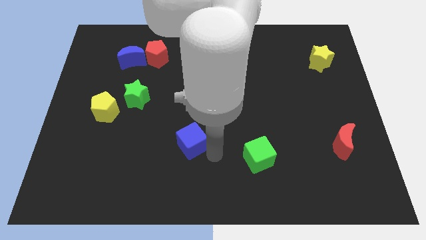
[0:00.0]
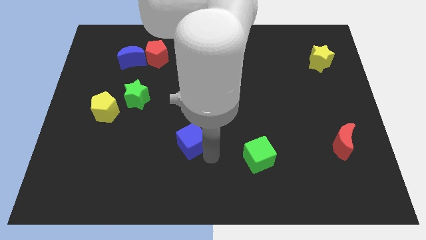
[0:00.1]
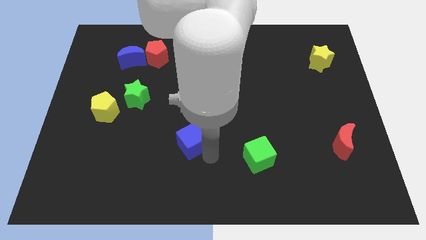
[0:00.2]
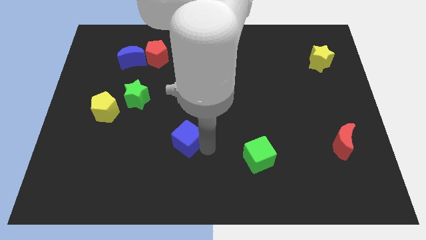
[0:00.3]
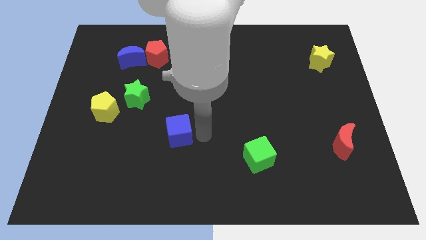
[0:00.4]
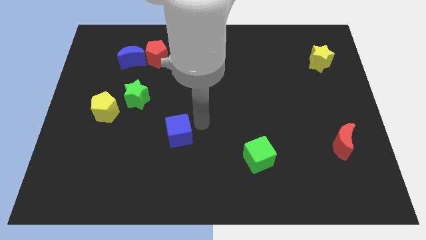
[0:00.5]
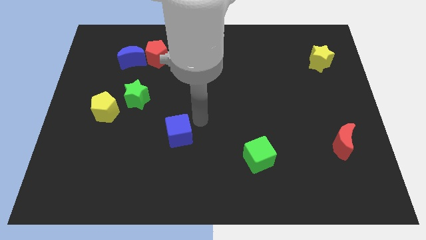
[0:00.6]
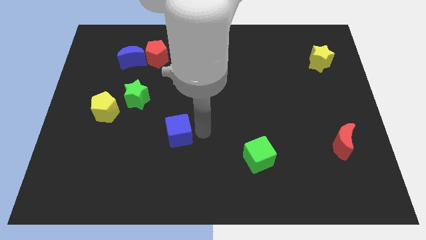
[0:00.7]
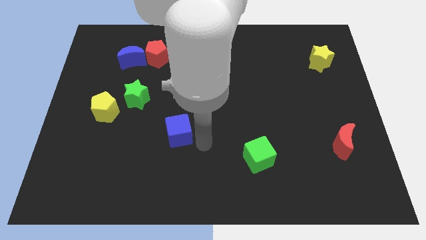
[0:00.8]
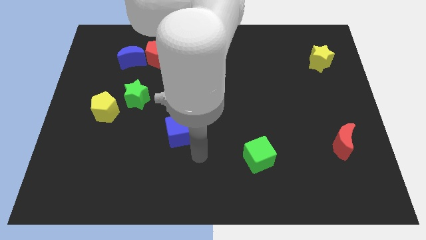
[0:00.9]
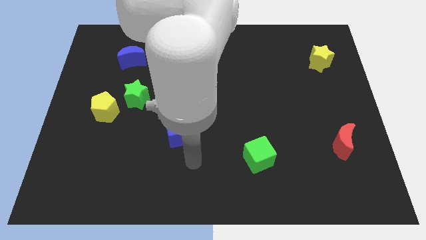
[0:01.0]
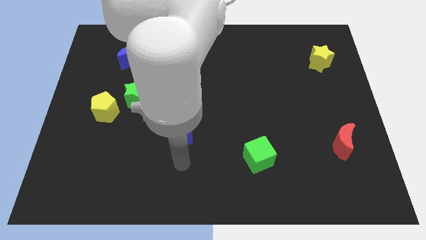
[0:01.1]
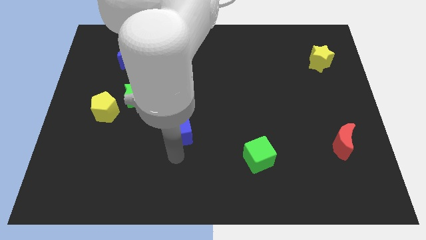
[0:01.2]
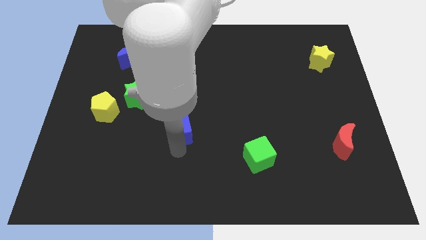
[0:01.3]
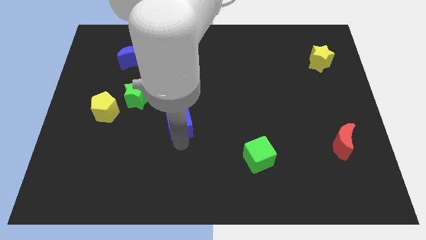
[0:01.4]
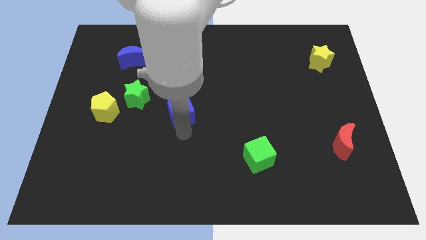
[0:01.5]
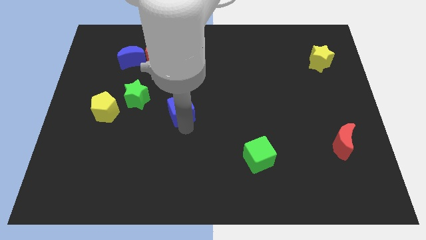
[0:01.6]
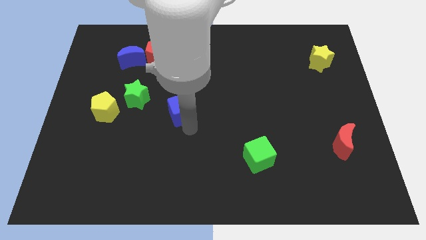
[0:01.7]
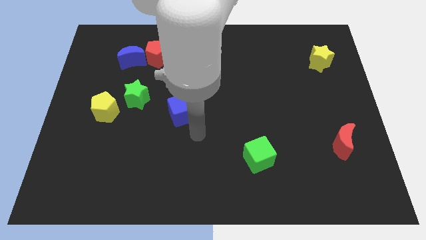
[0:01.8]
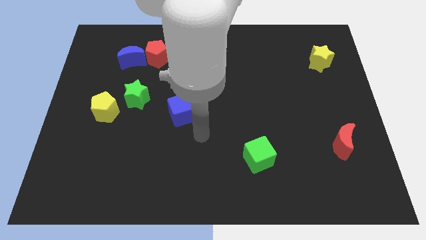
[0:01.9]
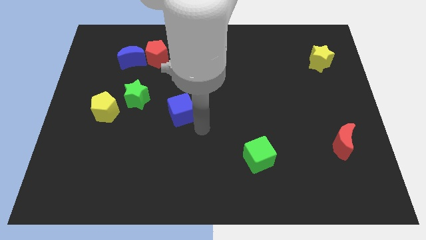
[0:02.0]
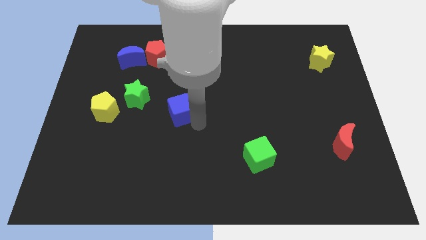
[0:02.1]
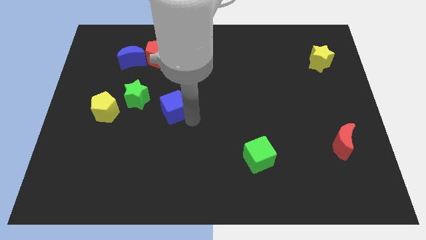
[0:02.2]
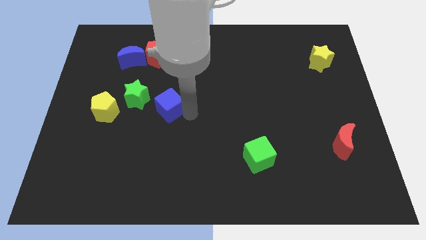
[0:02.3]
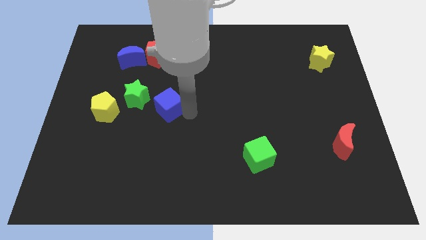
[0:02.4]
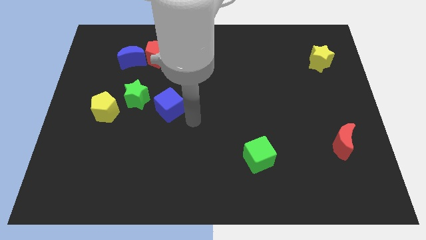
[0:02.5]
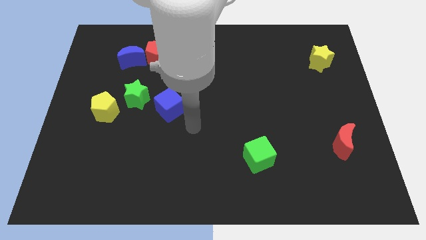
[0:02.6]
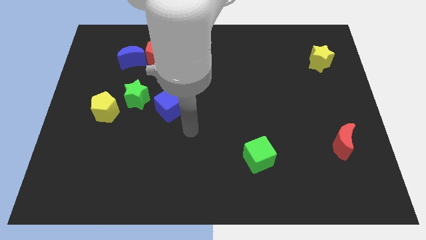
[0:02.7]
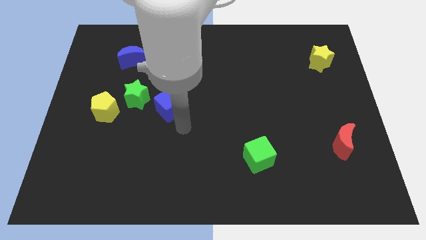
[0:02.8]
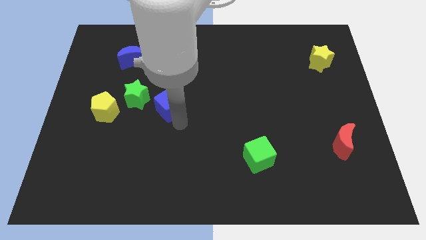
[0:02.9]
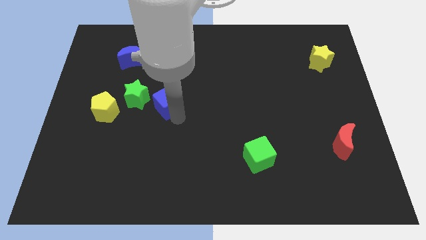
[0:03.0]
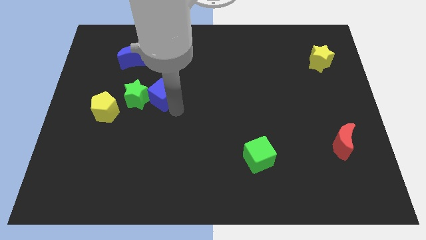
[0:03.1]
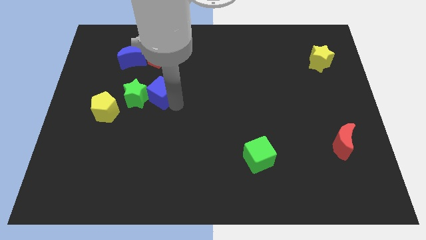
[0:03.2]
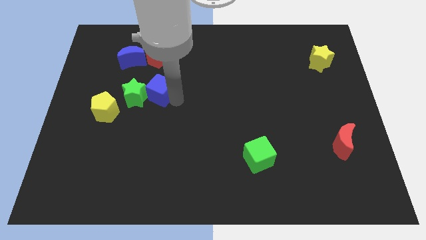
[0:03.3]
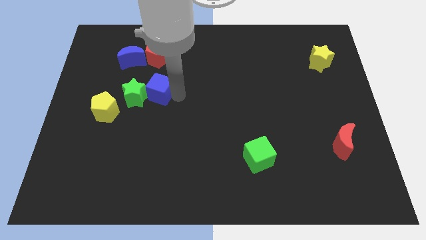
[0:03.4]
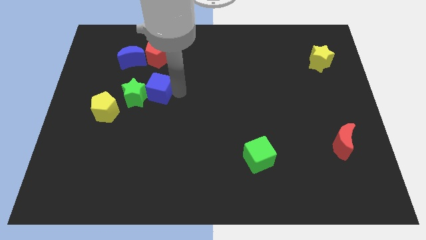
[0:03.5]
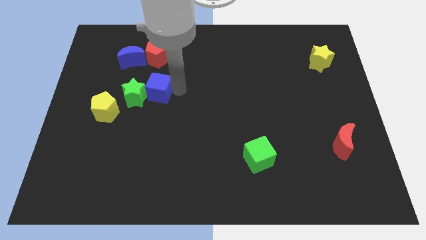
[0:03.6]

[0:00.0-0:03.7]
move the blue cube to the right of the green star

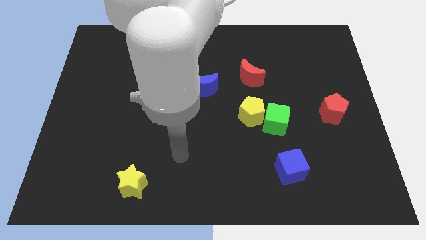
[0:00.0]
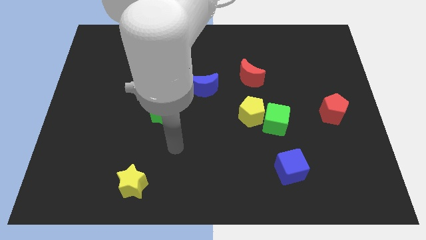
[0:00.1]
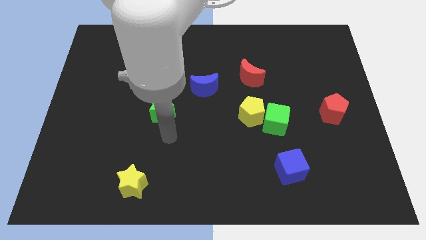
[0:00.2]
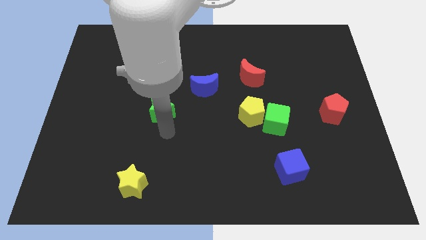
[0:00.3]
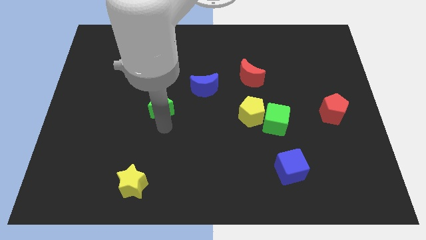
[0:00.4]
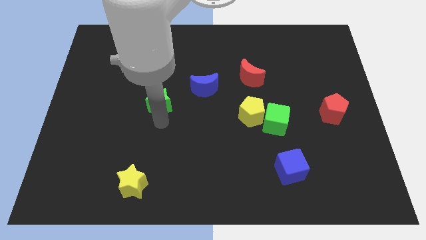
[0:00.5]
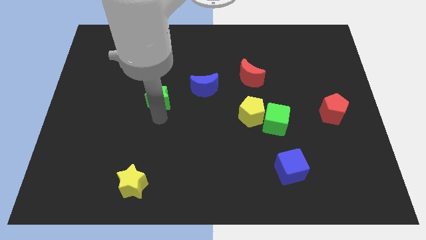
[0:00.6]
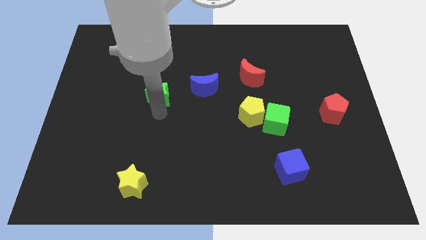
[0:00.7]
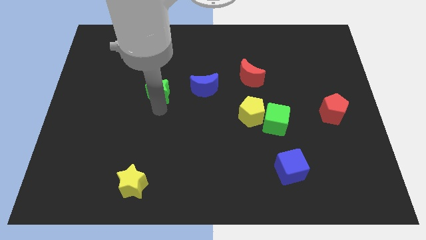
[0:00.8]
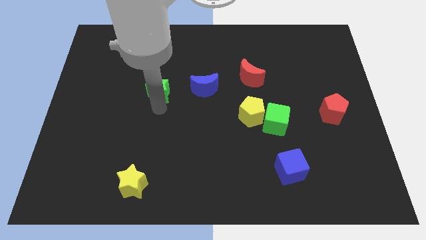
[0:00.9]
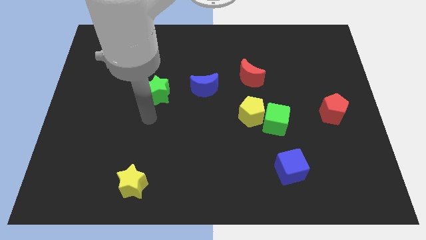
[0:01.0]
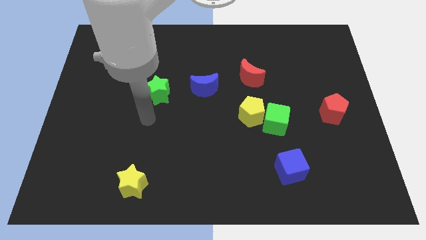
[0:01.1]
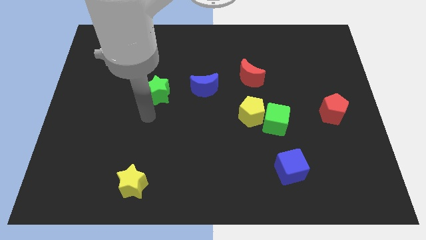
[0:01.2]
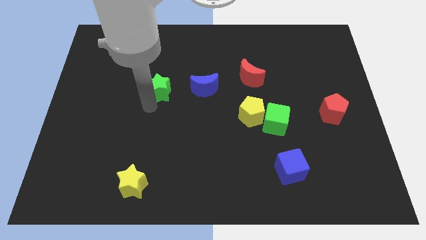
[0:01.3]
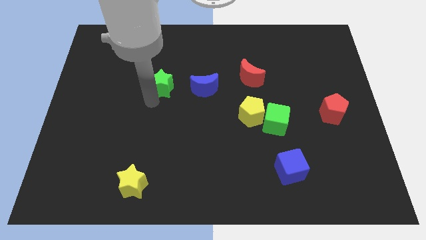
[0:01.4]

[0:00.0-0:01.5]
slide the green star parallel to the blue moon

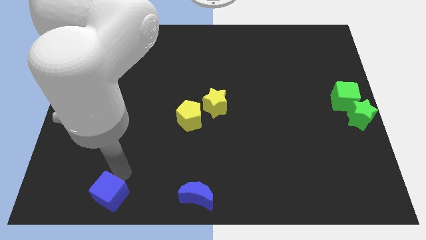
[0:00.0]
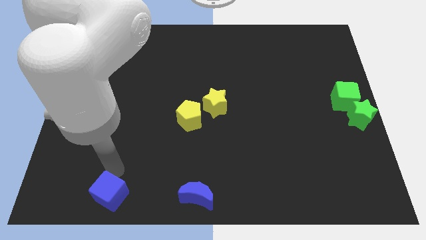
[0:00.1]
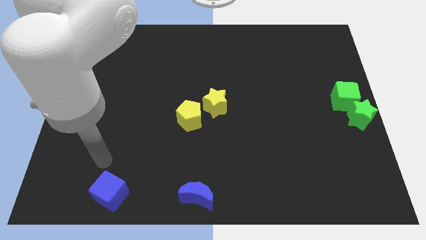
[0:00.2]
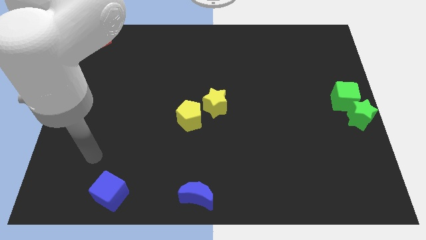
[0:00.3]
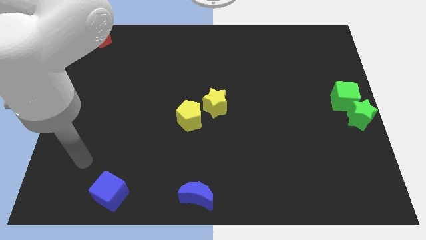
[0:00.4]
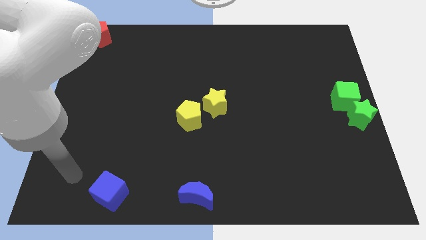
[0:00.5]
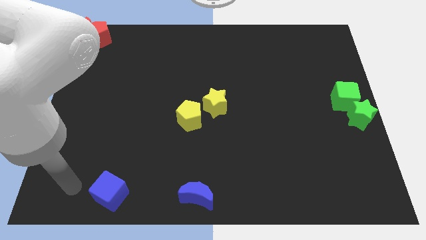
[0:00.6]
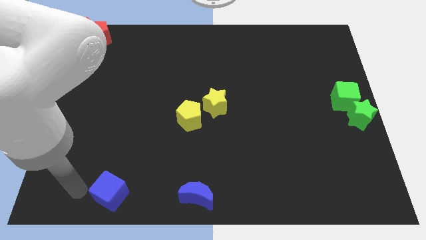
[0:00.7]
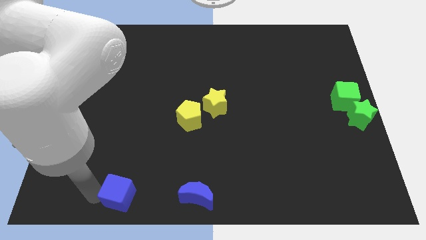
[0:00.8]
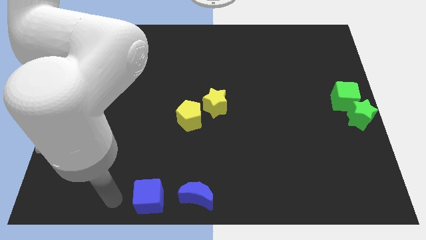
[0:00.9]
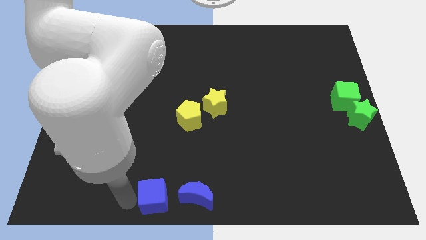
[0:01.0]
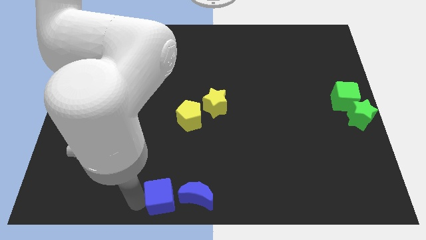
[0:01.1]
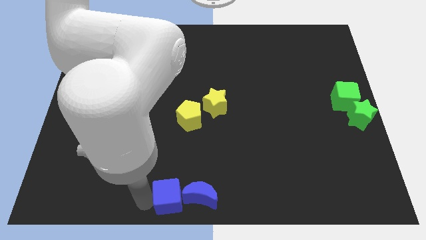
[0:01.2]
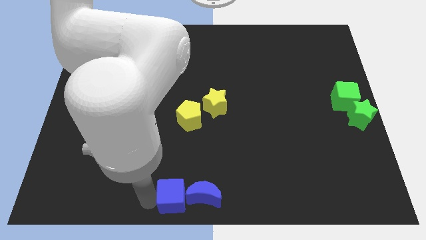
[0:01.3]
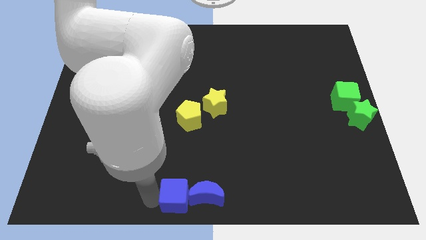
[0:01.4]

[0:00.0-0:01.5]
push the blue cube into to the blue crescent

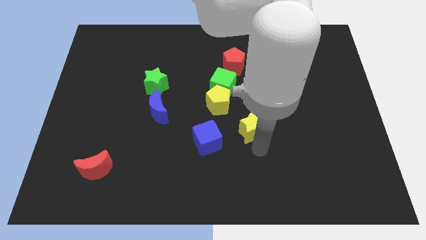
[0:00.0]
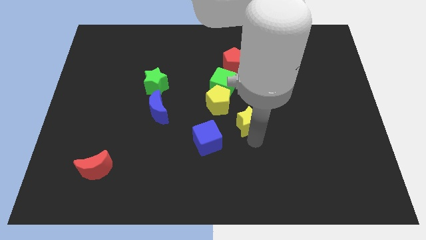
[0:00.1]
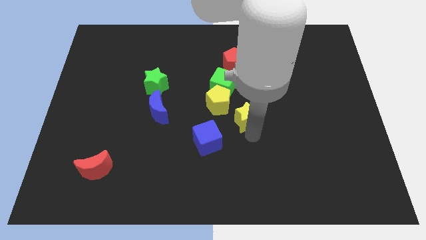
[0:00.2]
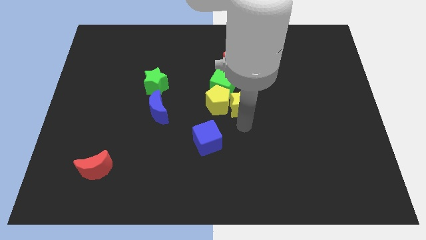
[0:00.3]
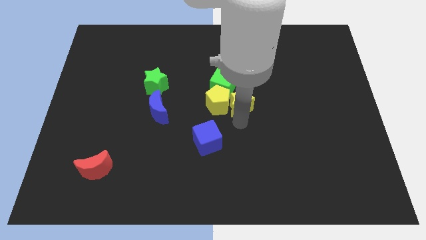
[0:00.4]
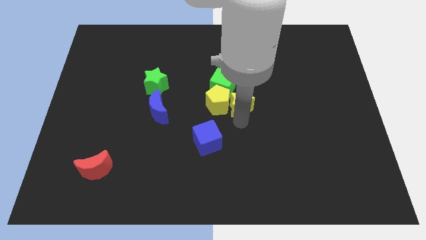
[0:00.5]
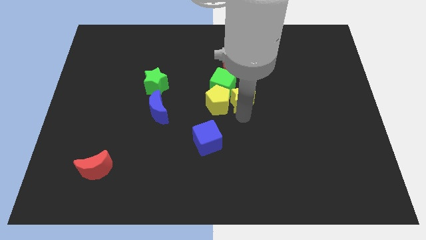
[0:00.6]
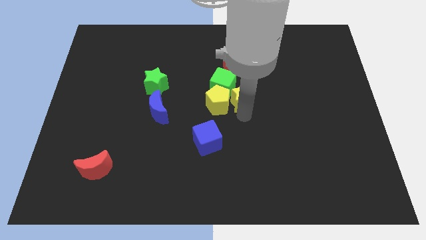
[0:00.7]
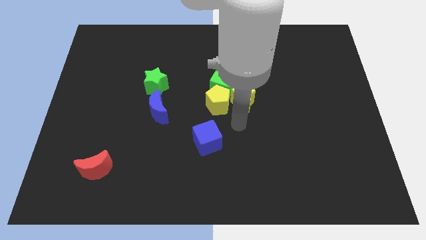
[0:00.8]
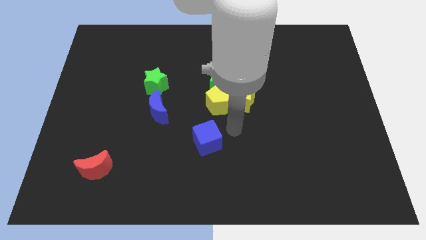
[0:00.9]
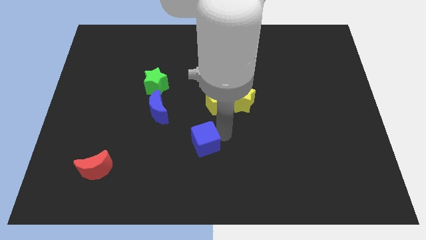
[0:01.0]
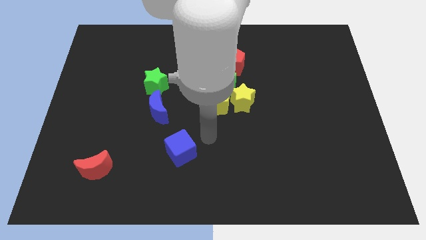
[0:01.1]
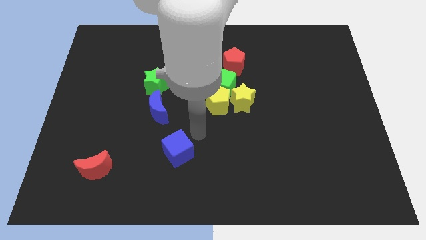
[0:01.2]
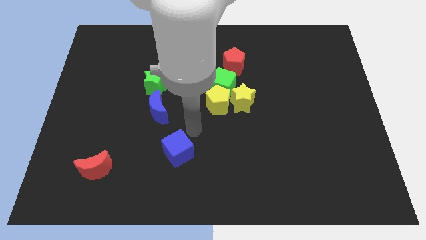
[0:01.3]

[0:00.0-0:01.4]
slide the blue block slightly towards the bottom left side

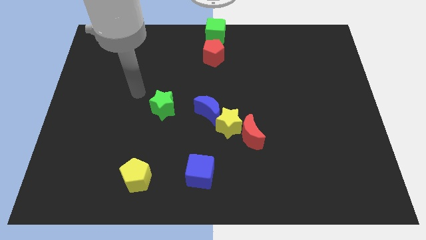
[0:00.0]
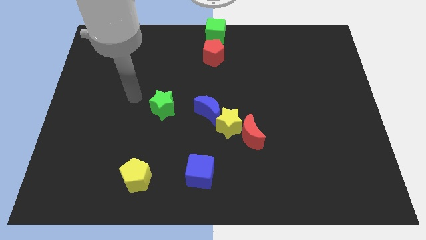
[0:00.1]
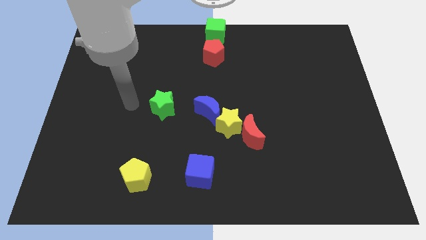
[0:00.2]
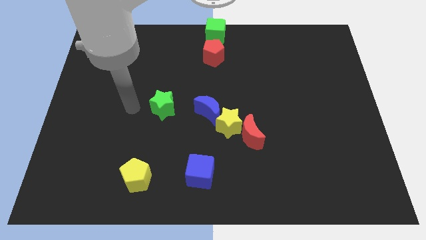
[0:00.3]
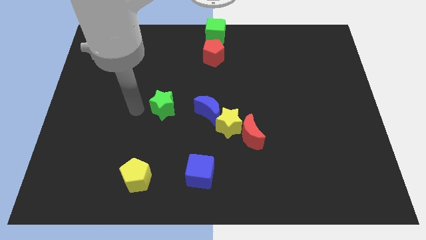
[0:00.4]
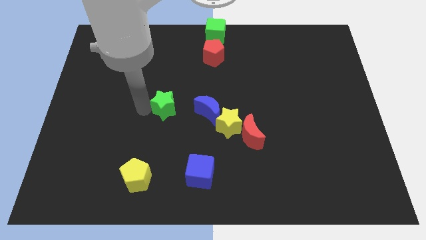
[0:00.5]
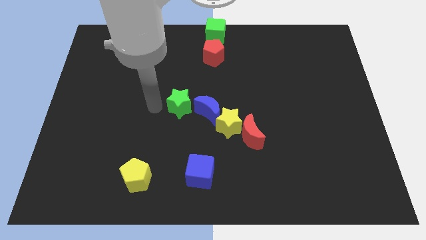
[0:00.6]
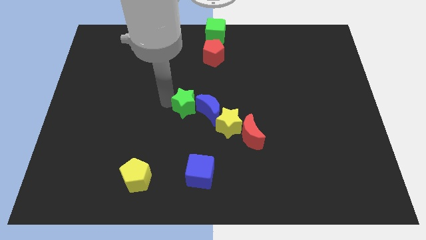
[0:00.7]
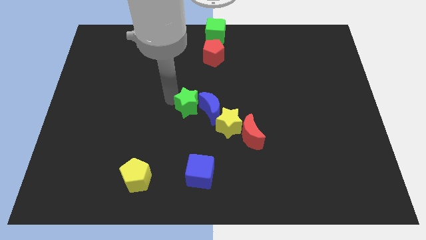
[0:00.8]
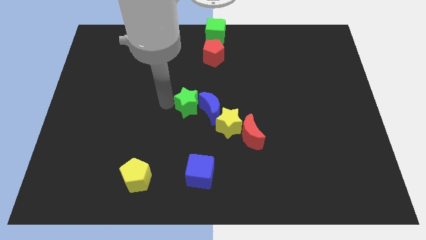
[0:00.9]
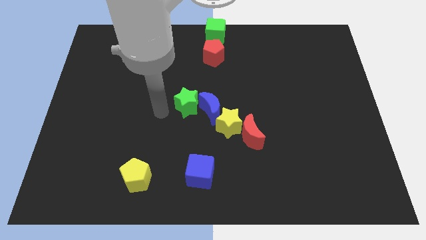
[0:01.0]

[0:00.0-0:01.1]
push green star into blue moon
